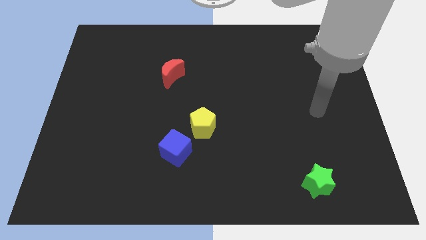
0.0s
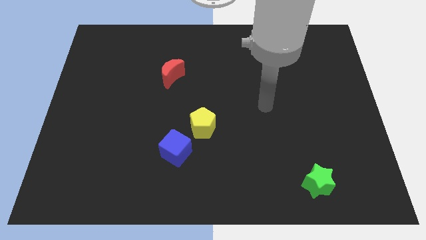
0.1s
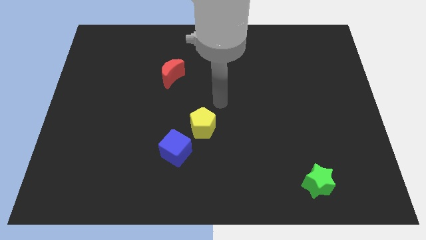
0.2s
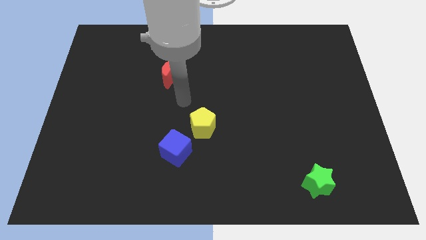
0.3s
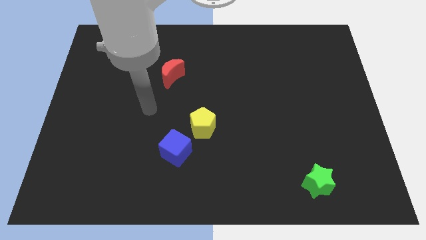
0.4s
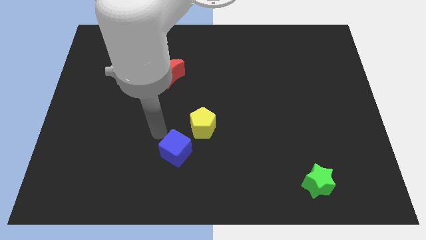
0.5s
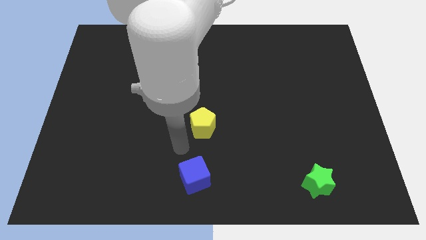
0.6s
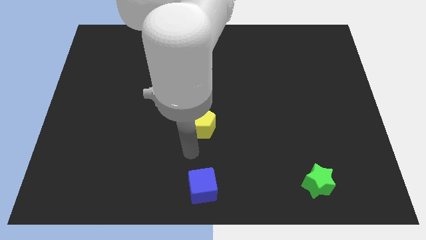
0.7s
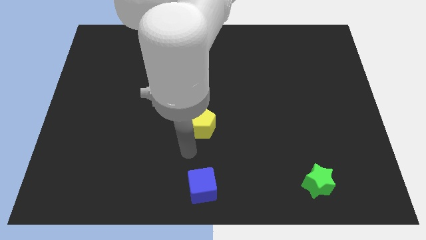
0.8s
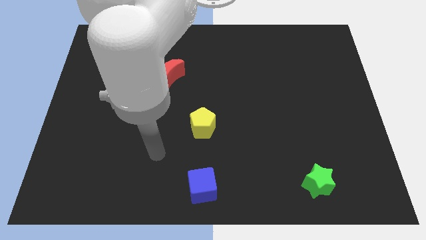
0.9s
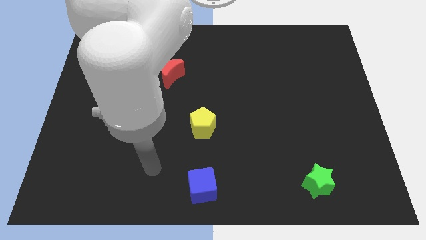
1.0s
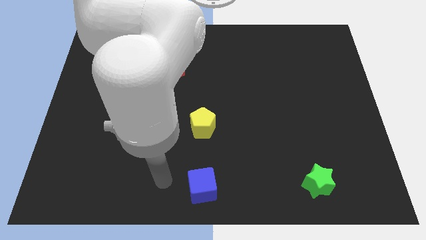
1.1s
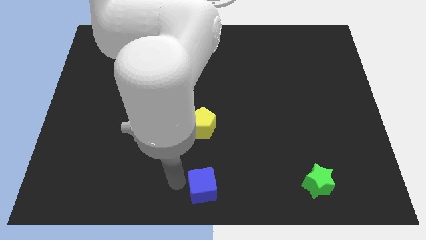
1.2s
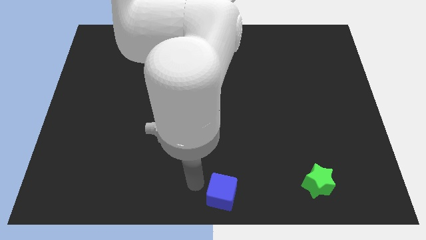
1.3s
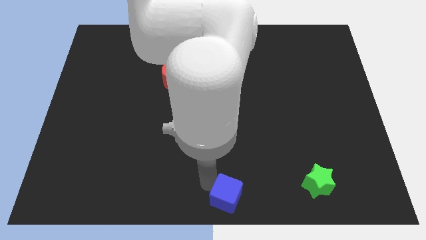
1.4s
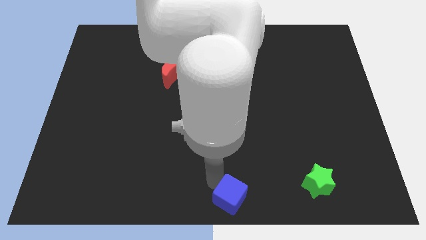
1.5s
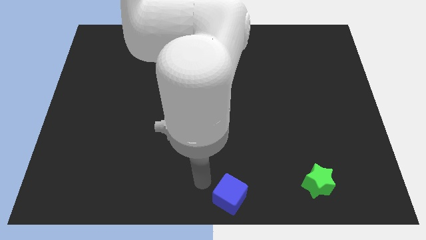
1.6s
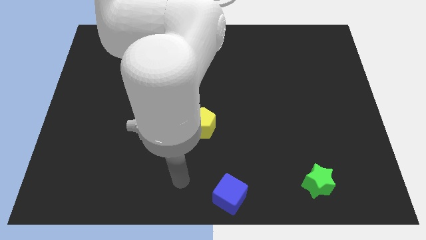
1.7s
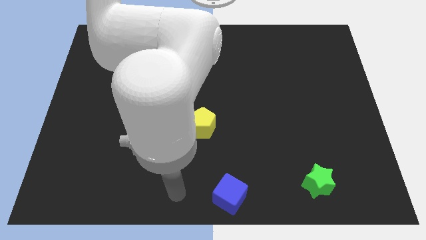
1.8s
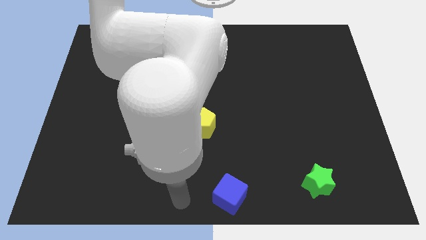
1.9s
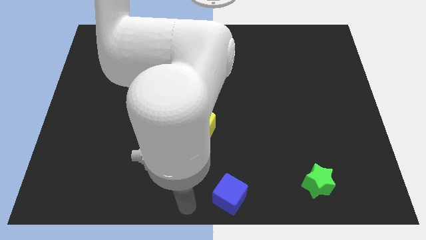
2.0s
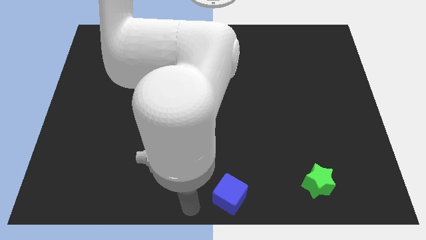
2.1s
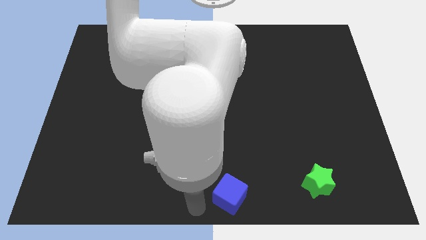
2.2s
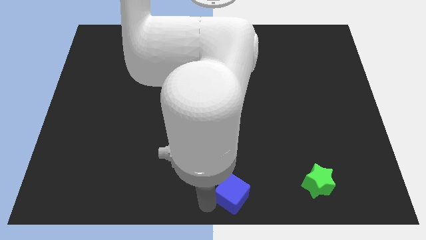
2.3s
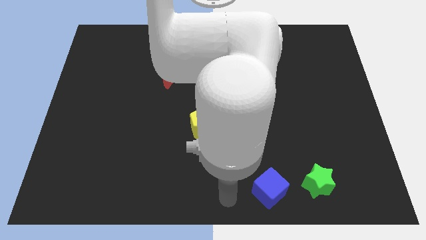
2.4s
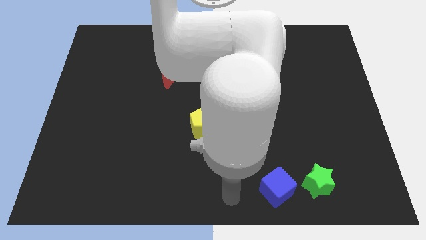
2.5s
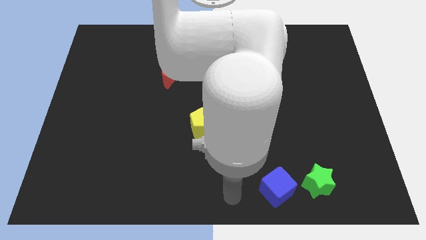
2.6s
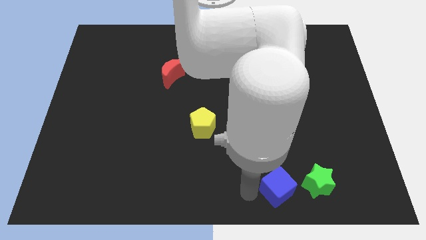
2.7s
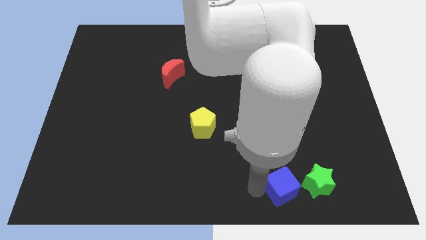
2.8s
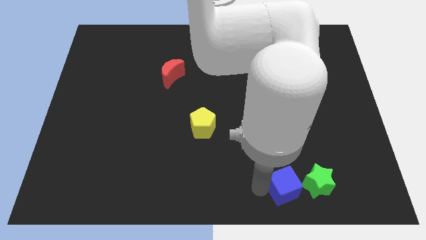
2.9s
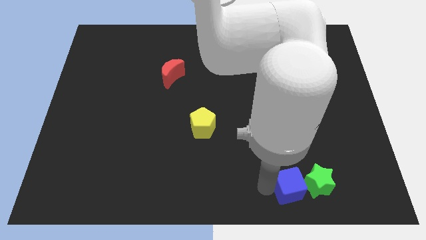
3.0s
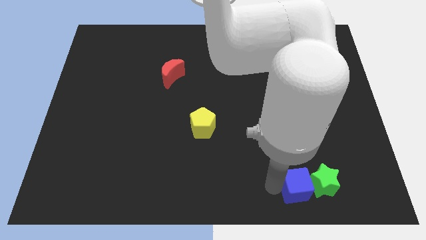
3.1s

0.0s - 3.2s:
push the blue cube towards the green block

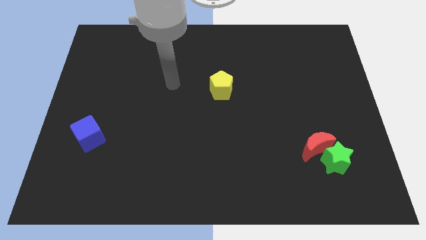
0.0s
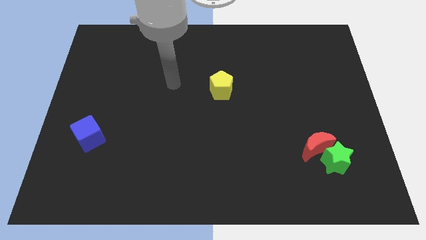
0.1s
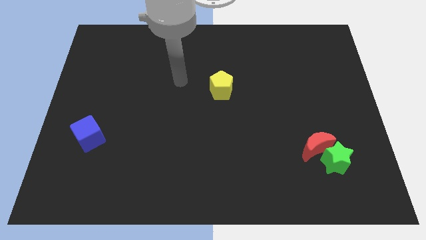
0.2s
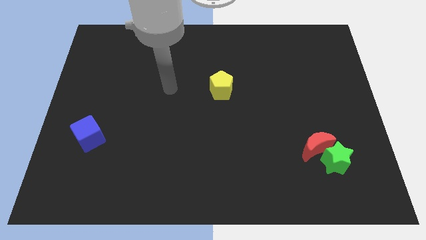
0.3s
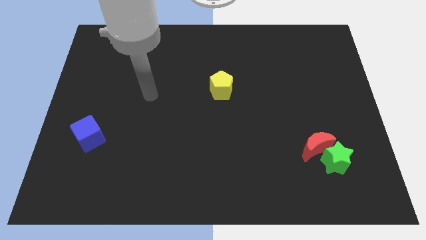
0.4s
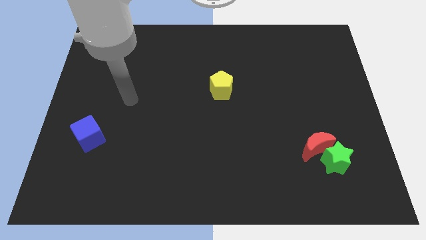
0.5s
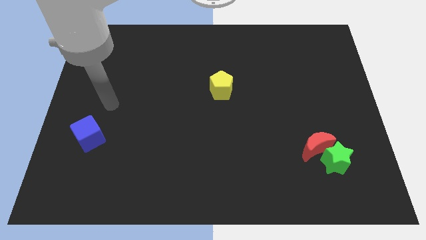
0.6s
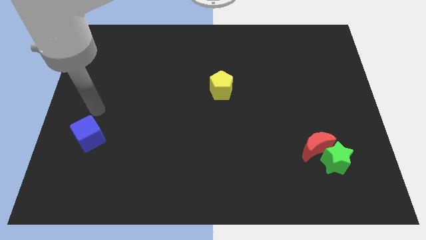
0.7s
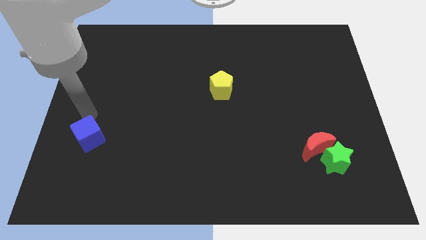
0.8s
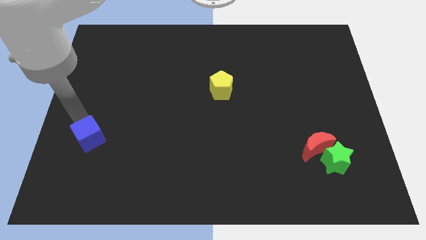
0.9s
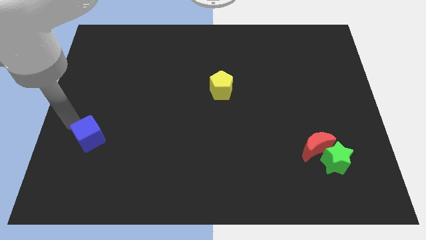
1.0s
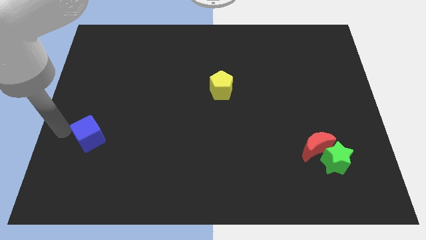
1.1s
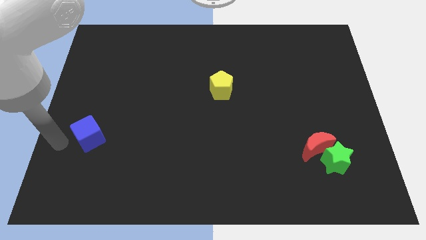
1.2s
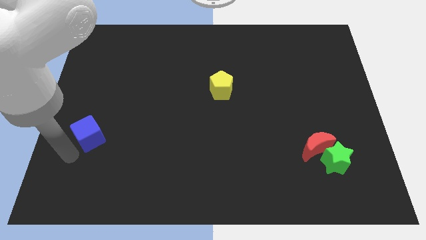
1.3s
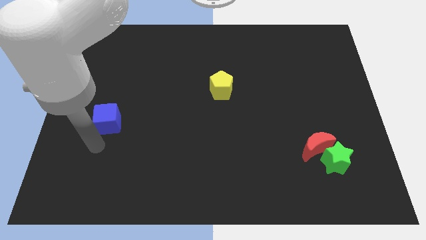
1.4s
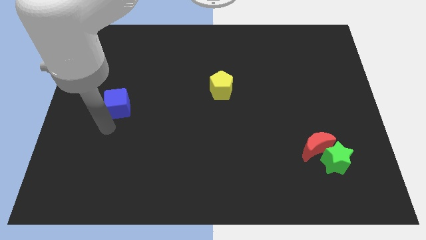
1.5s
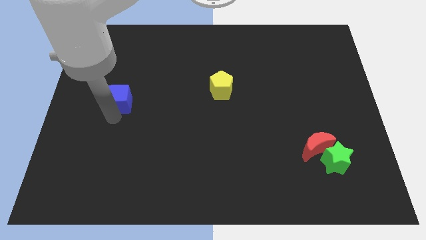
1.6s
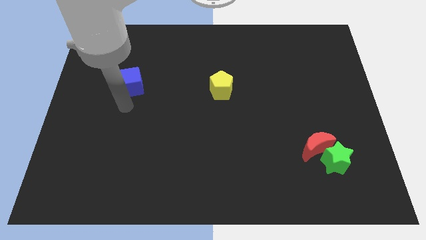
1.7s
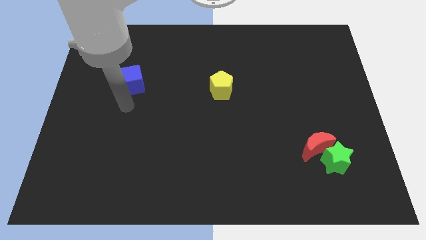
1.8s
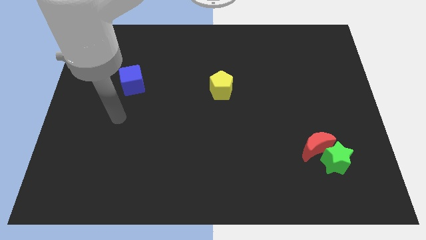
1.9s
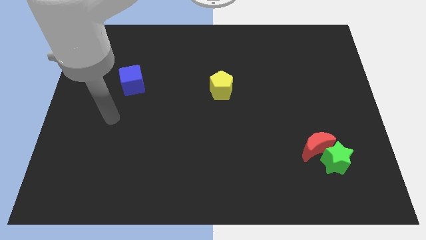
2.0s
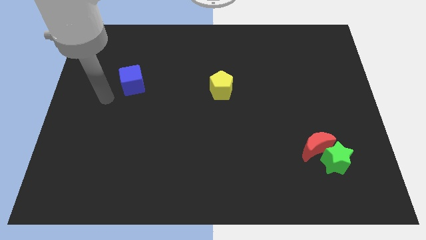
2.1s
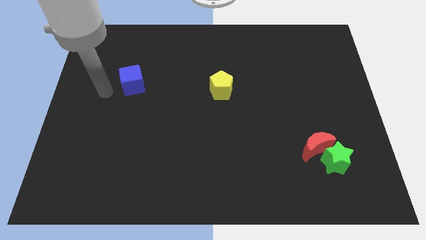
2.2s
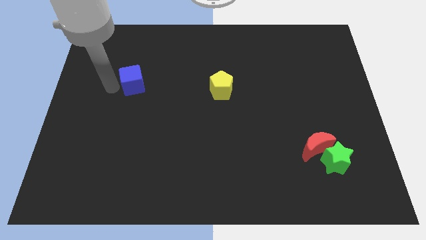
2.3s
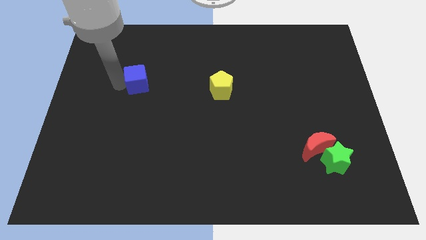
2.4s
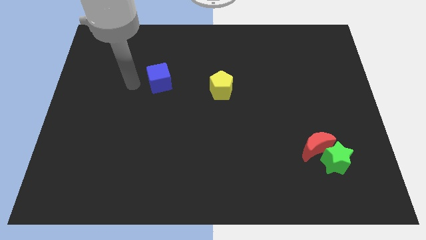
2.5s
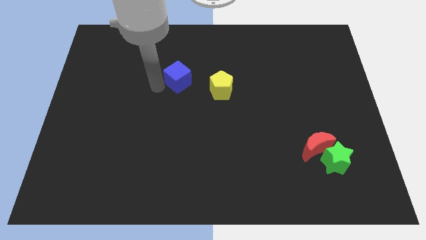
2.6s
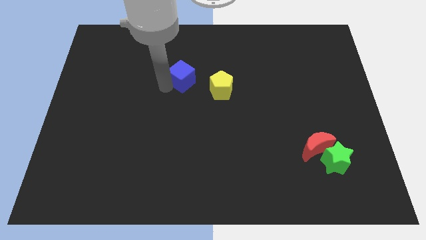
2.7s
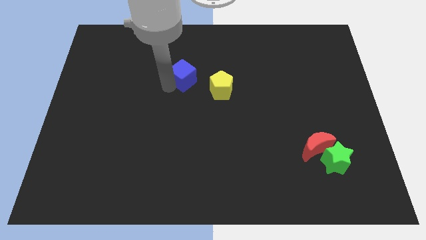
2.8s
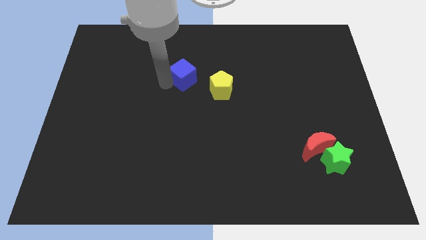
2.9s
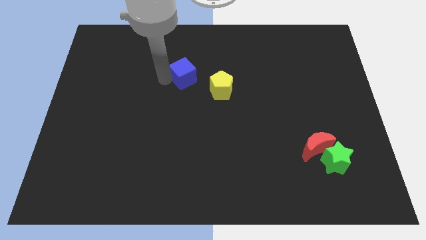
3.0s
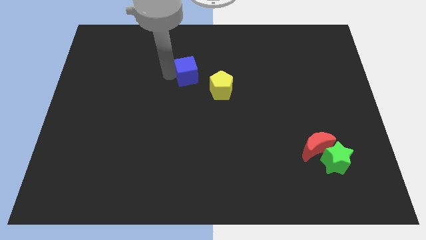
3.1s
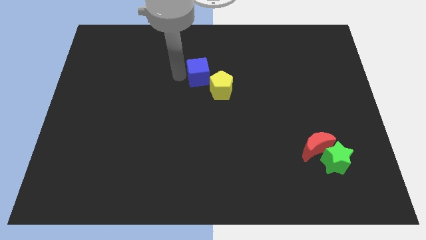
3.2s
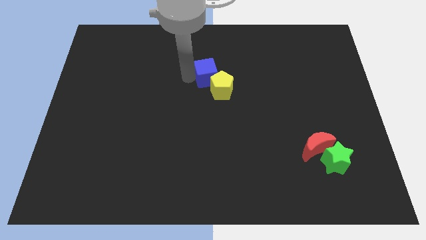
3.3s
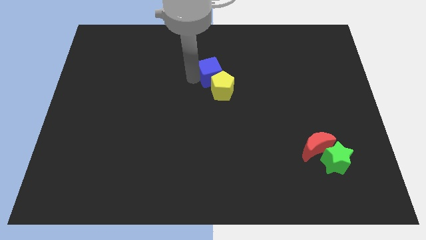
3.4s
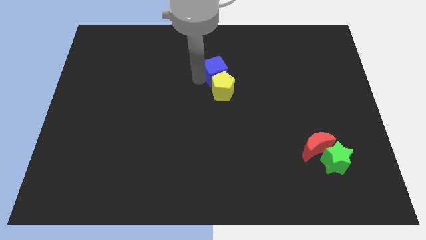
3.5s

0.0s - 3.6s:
push the cube next to the yellow block

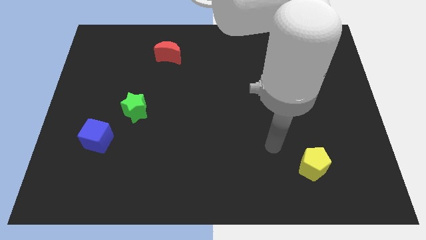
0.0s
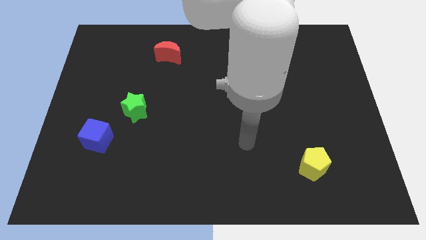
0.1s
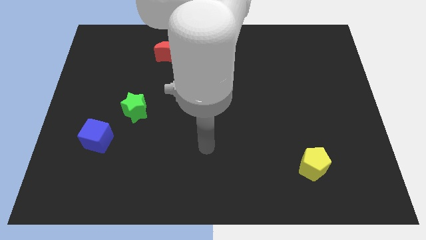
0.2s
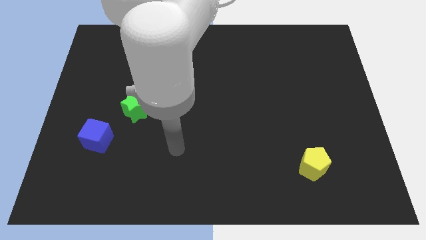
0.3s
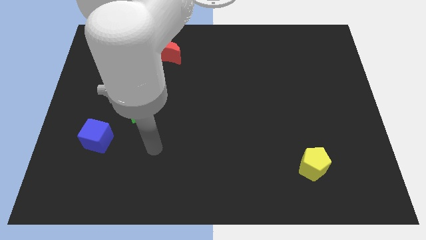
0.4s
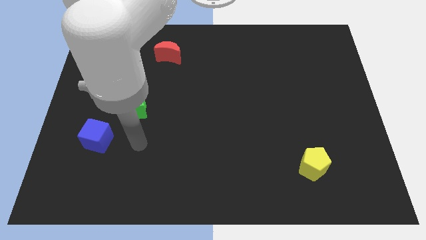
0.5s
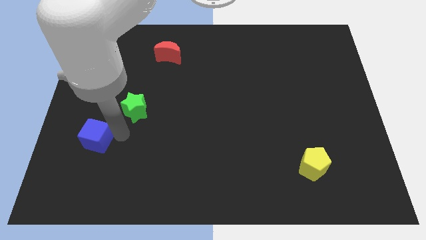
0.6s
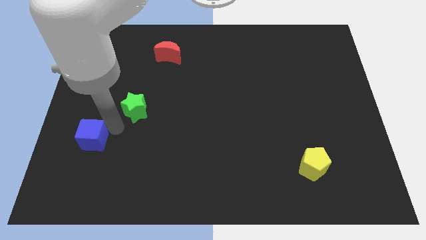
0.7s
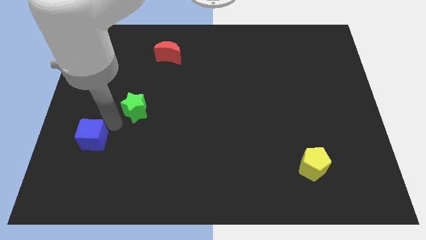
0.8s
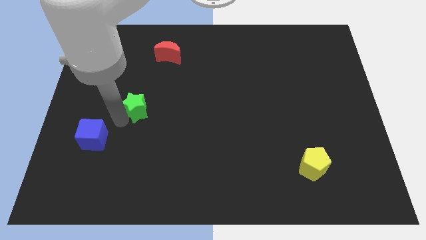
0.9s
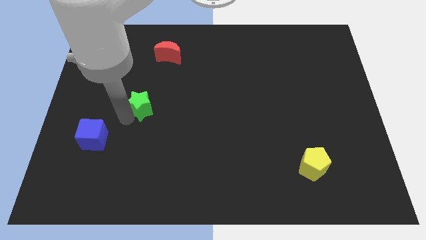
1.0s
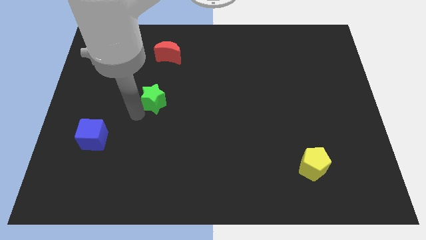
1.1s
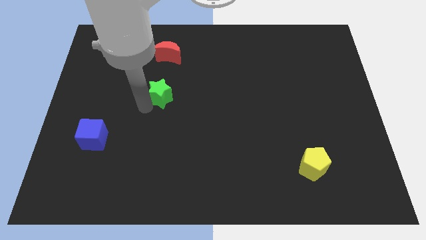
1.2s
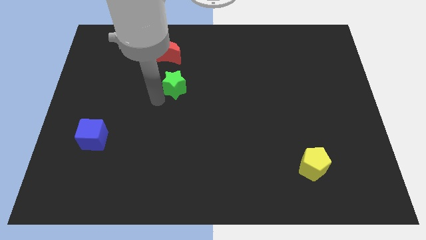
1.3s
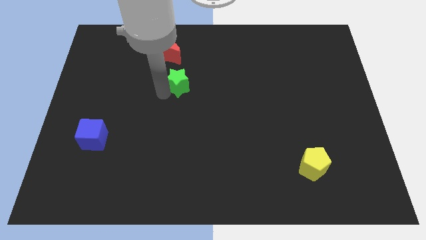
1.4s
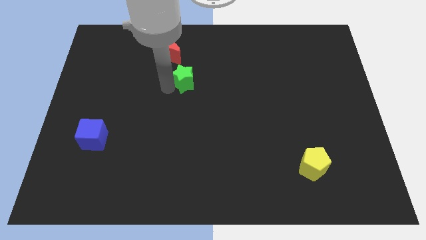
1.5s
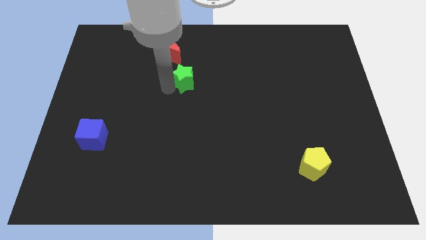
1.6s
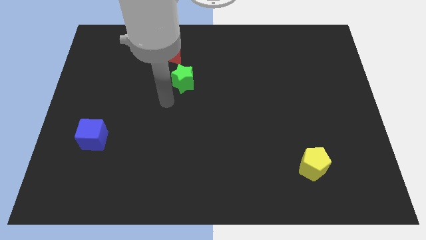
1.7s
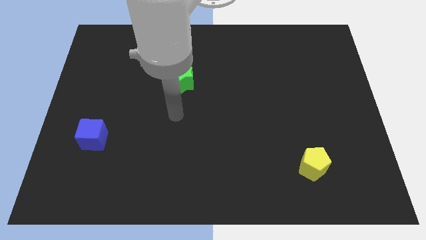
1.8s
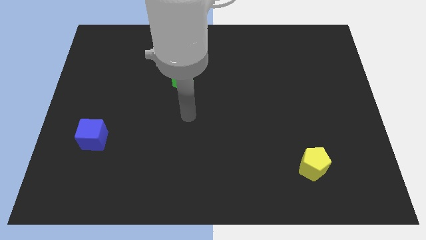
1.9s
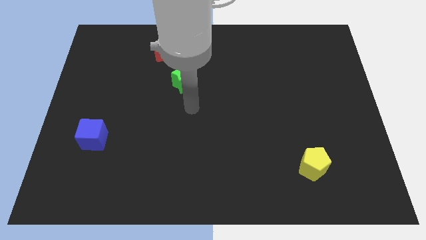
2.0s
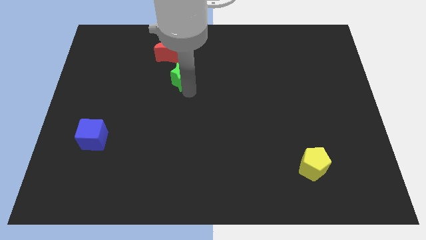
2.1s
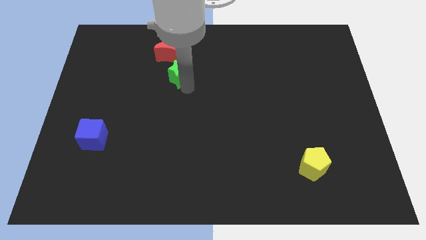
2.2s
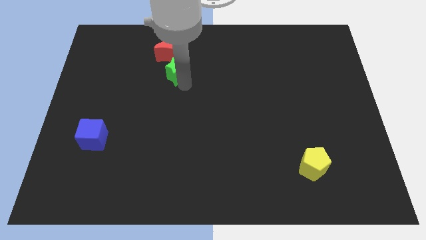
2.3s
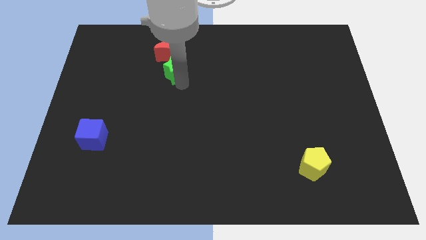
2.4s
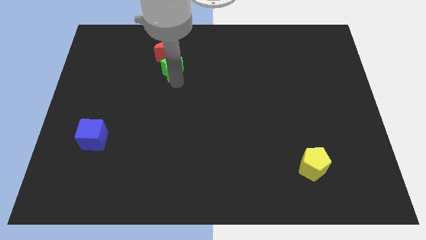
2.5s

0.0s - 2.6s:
slide the green star towards the red moon
